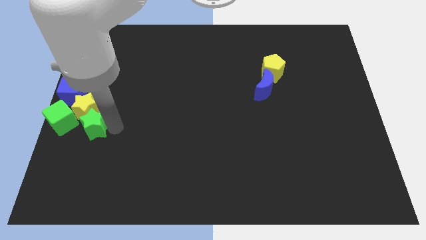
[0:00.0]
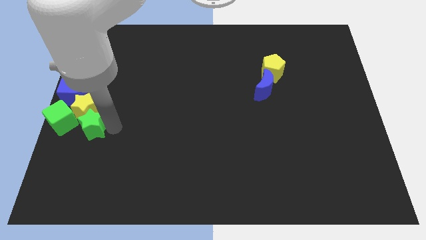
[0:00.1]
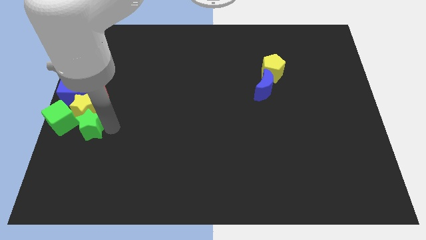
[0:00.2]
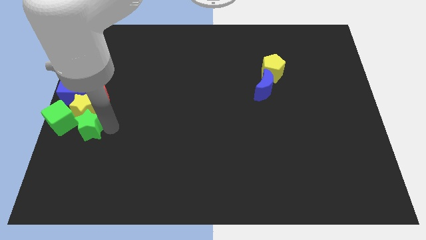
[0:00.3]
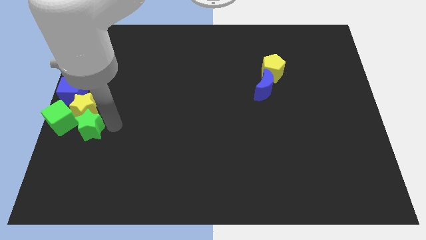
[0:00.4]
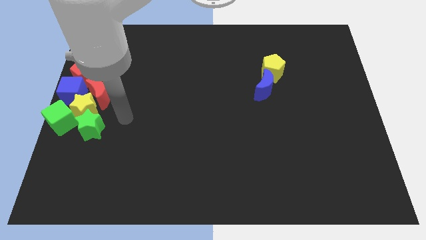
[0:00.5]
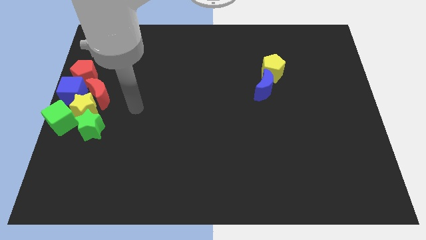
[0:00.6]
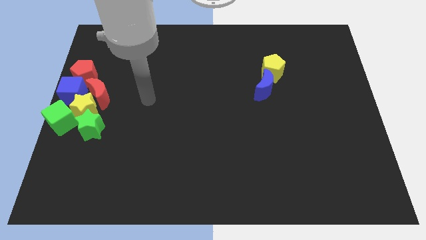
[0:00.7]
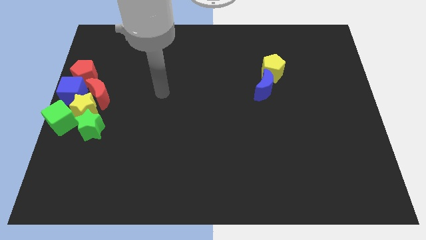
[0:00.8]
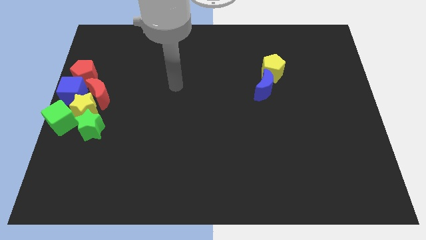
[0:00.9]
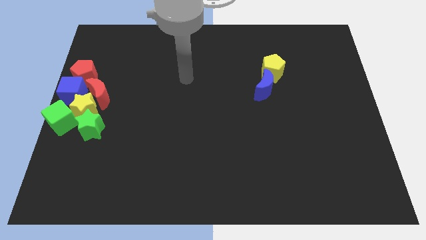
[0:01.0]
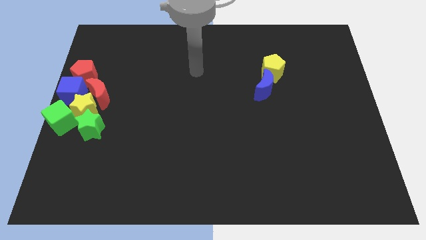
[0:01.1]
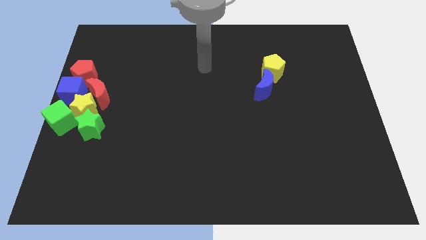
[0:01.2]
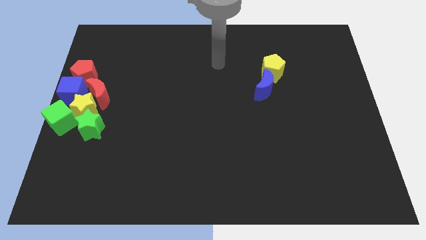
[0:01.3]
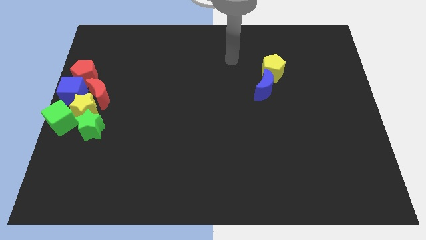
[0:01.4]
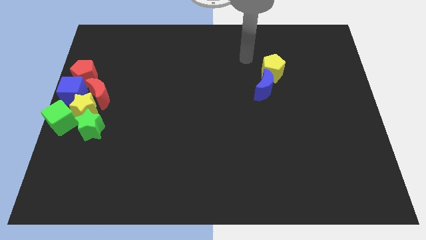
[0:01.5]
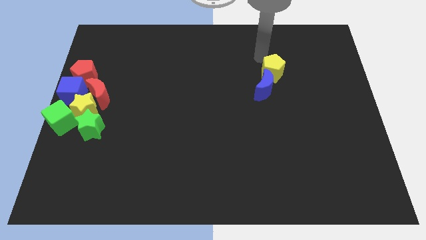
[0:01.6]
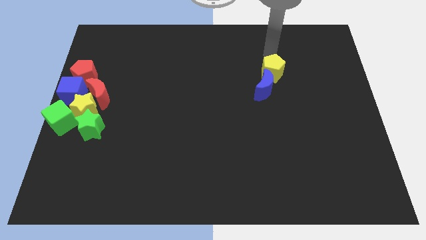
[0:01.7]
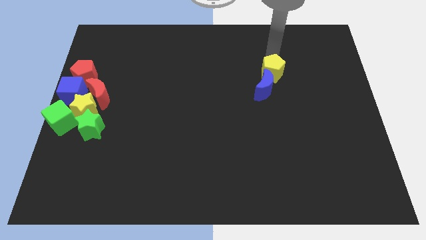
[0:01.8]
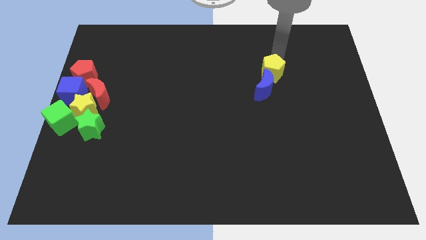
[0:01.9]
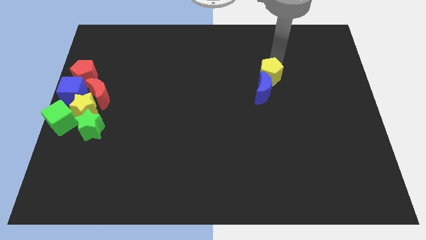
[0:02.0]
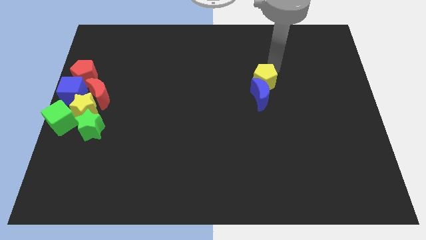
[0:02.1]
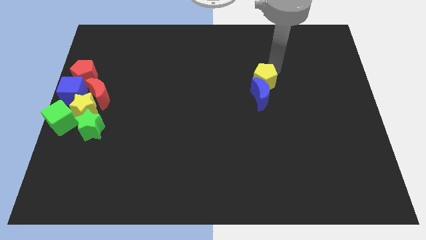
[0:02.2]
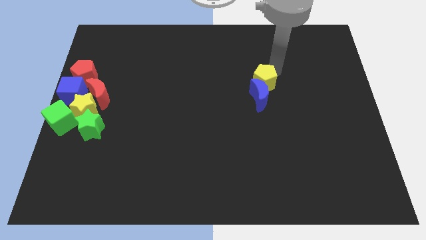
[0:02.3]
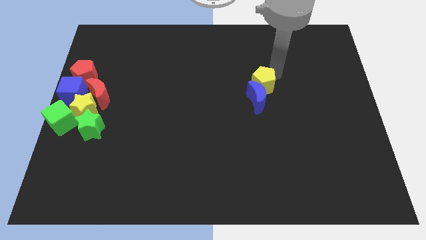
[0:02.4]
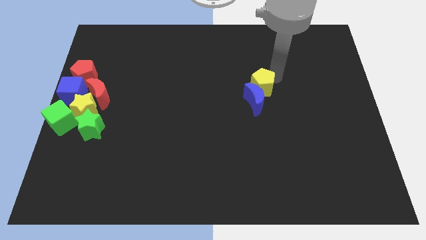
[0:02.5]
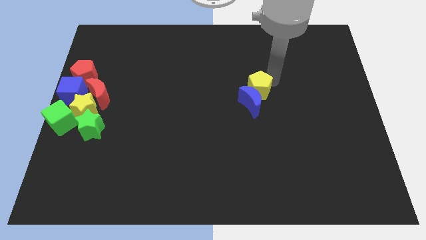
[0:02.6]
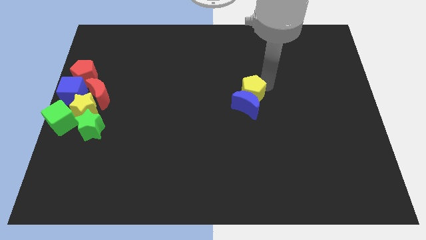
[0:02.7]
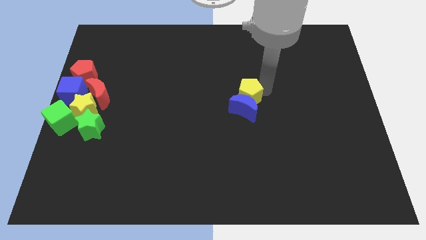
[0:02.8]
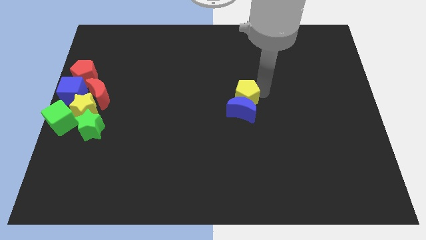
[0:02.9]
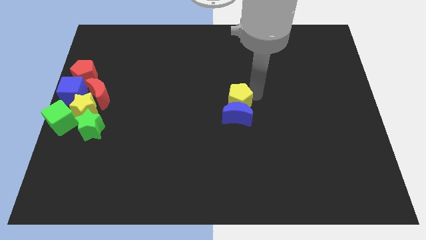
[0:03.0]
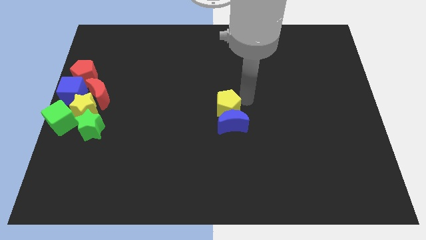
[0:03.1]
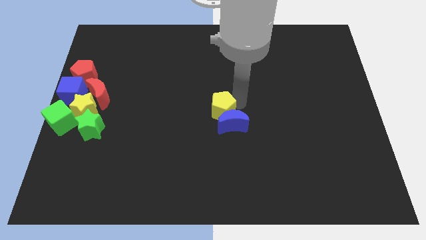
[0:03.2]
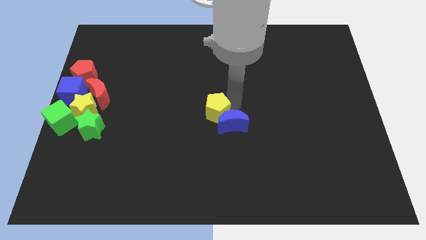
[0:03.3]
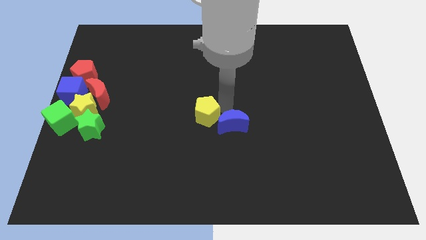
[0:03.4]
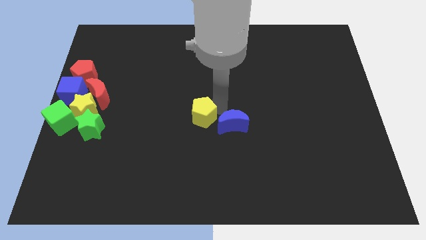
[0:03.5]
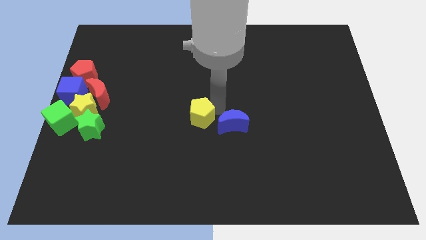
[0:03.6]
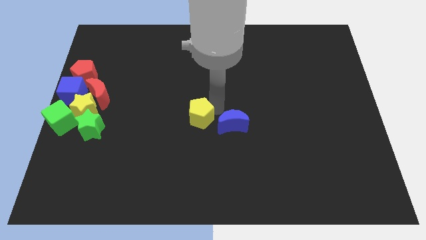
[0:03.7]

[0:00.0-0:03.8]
push yellow pentagon and blue moon to the center of the board

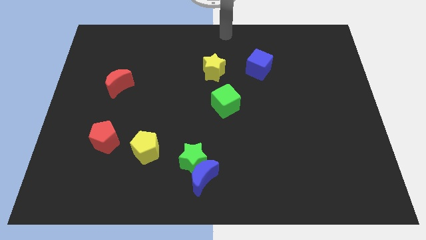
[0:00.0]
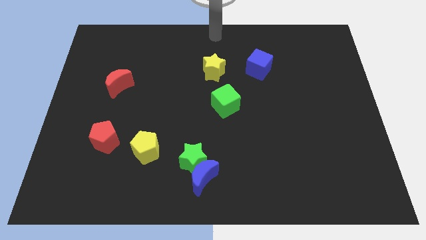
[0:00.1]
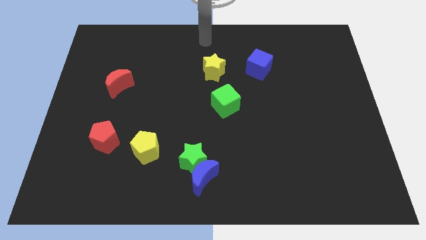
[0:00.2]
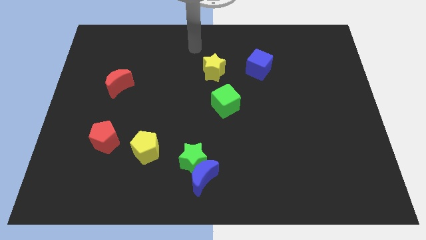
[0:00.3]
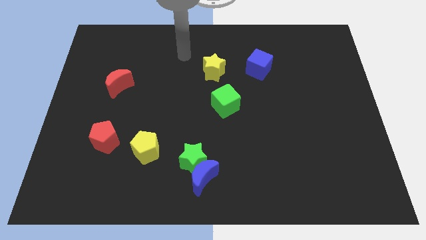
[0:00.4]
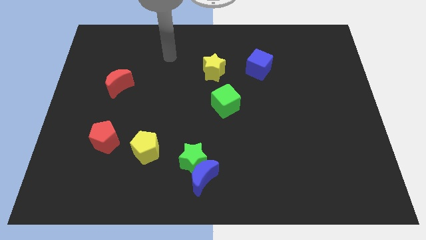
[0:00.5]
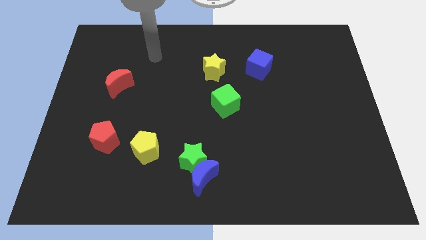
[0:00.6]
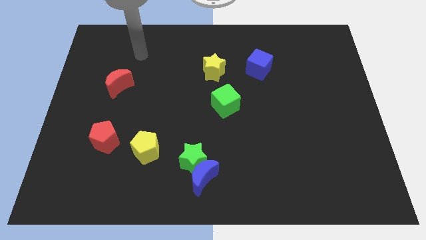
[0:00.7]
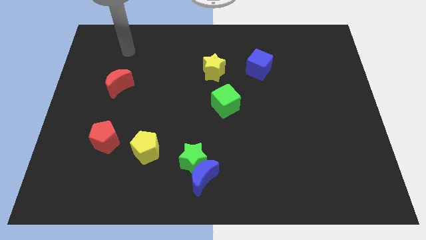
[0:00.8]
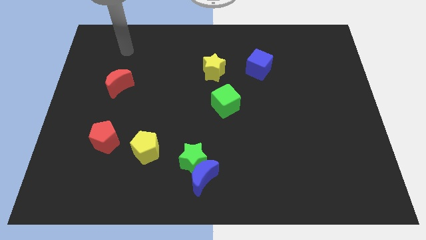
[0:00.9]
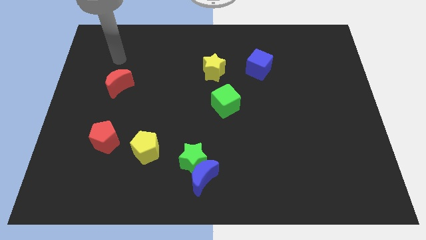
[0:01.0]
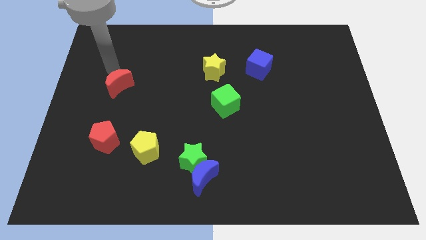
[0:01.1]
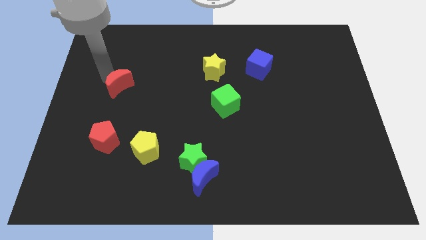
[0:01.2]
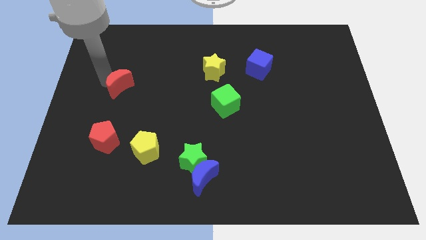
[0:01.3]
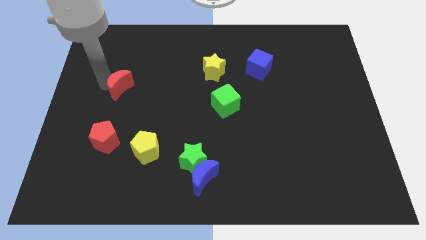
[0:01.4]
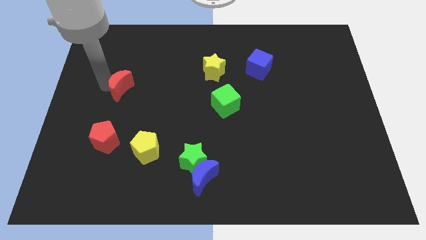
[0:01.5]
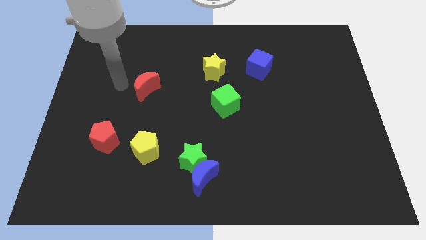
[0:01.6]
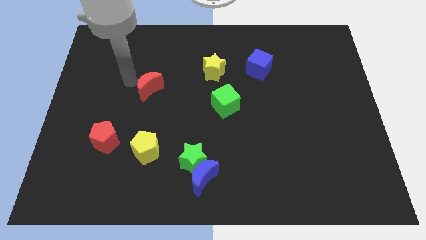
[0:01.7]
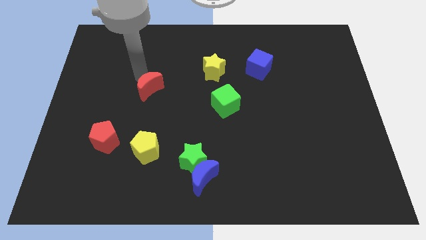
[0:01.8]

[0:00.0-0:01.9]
move the red crescent towards the right side of the table

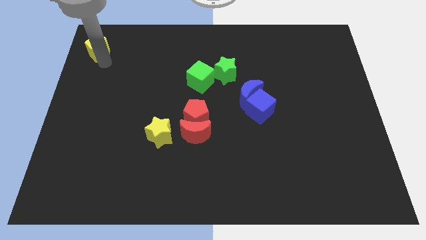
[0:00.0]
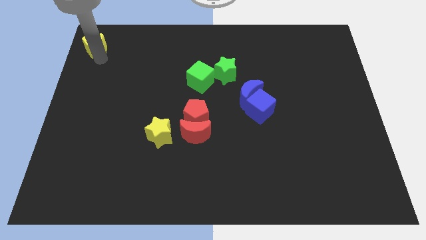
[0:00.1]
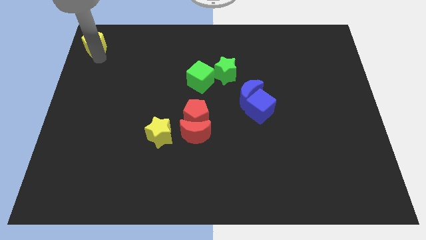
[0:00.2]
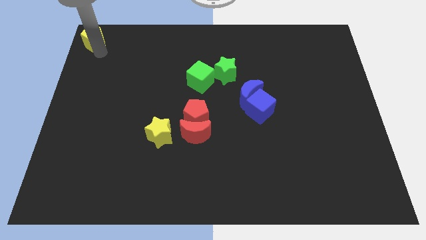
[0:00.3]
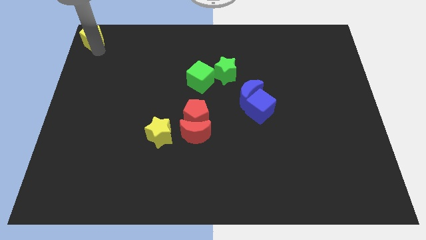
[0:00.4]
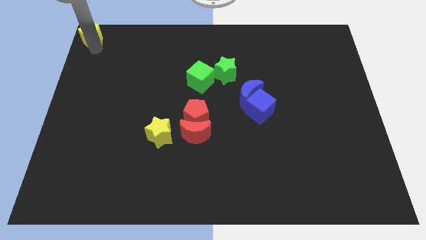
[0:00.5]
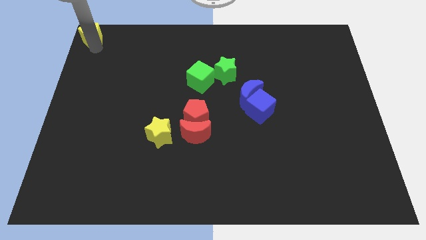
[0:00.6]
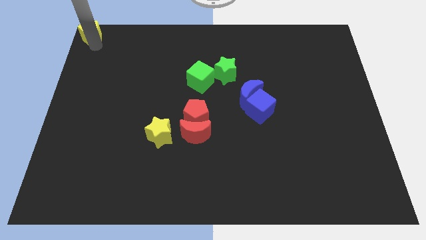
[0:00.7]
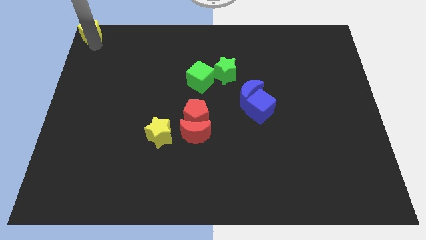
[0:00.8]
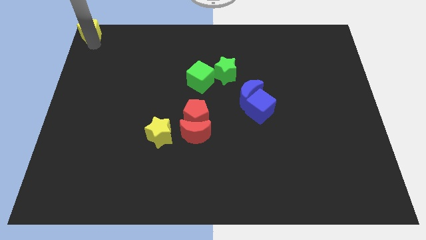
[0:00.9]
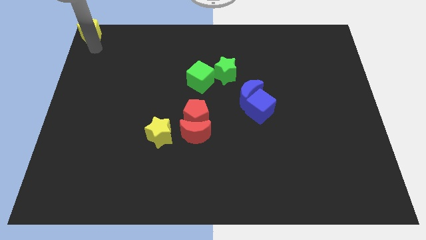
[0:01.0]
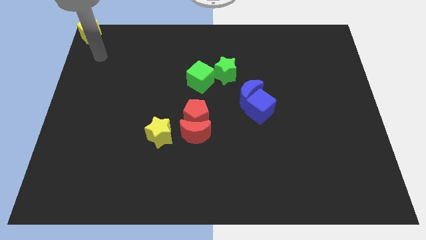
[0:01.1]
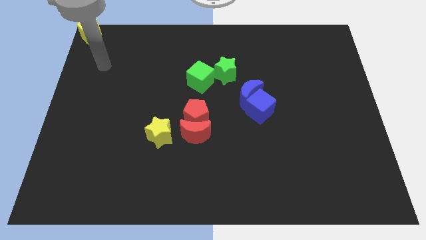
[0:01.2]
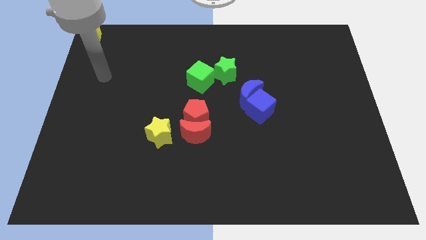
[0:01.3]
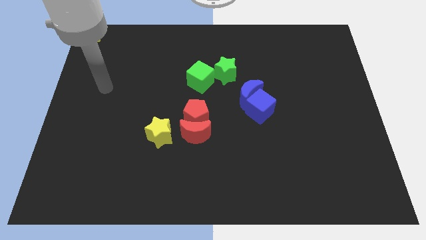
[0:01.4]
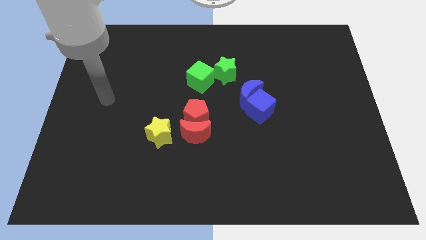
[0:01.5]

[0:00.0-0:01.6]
move the yellow pentagon to the top right corner of the board

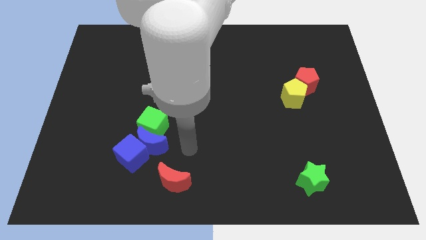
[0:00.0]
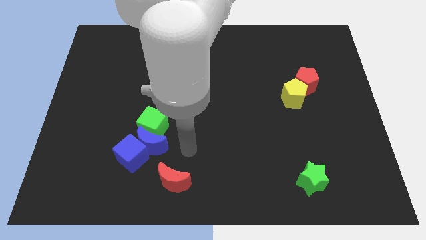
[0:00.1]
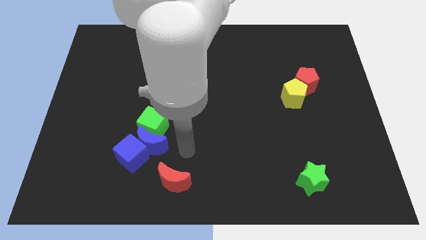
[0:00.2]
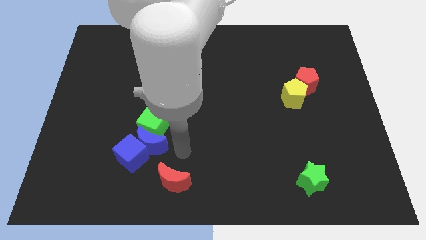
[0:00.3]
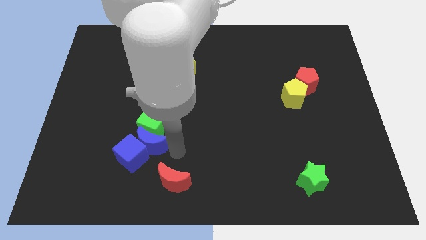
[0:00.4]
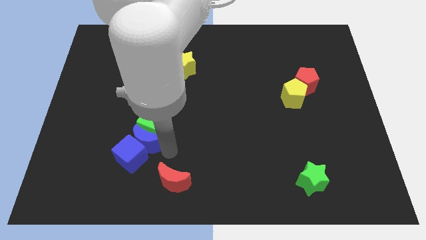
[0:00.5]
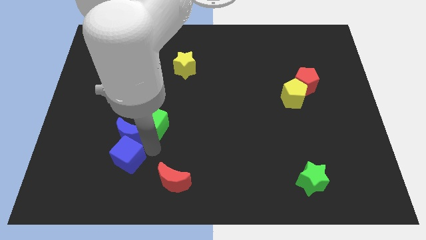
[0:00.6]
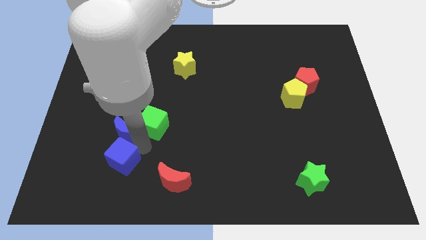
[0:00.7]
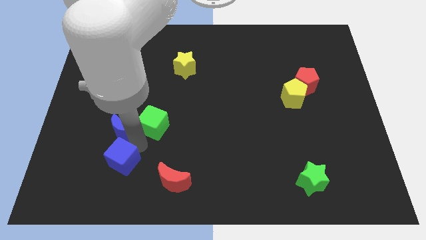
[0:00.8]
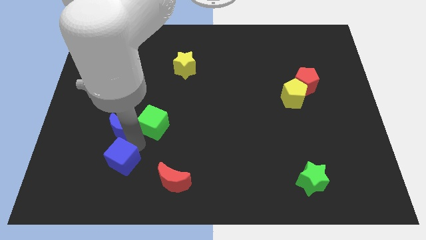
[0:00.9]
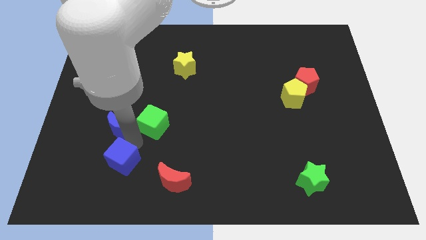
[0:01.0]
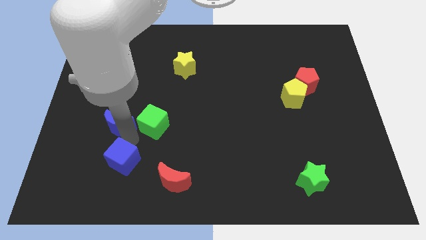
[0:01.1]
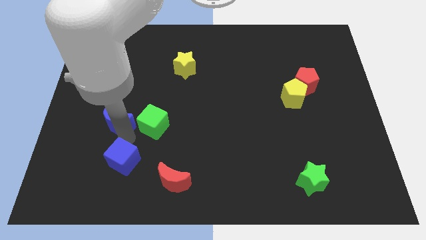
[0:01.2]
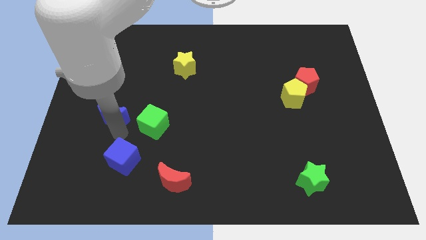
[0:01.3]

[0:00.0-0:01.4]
move blue moon away from the green cube

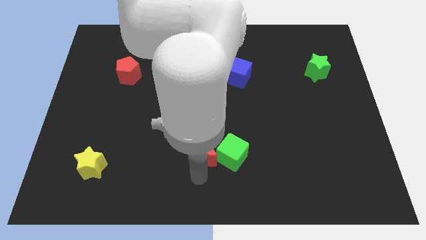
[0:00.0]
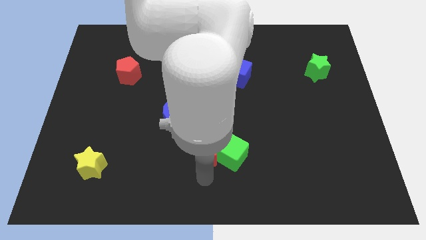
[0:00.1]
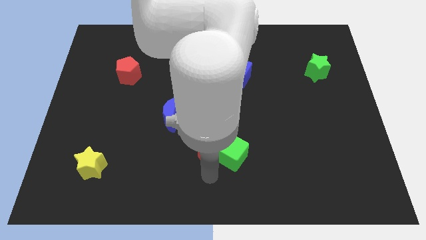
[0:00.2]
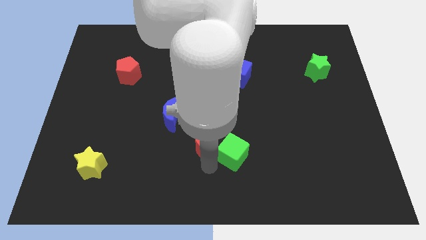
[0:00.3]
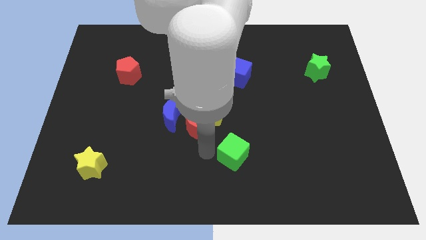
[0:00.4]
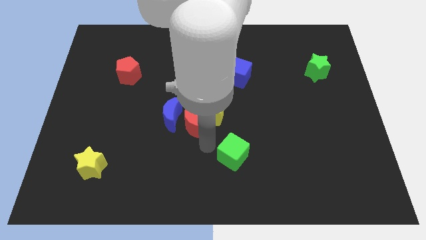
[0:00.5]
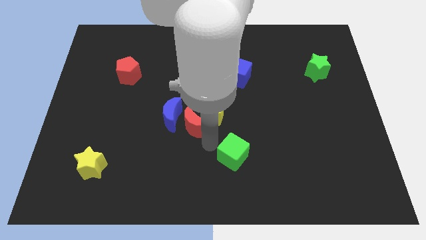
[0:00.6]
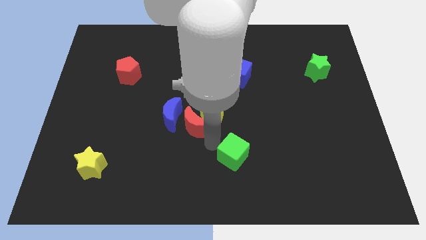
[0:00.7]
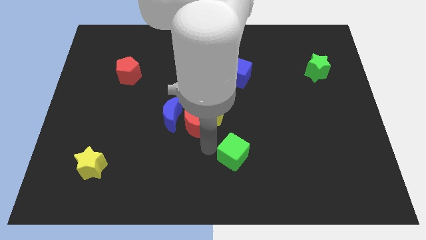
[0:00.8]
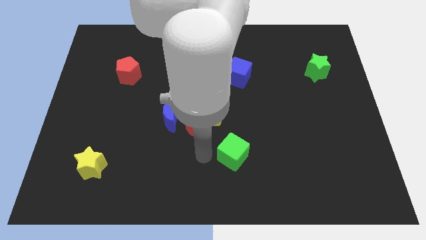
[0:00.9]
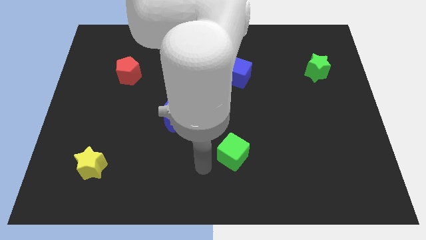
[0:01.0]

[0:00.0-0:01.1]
place the red crescent in between blue crescent and yellow pentagon
